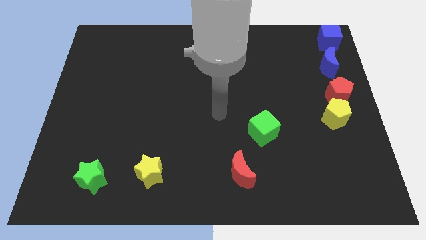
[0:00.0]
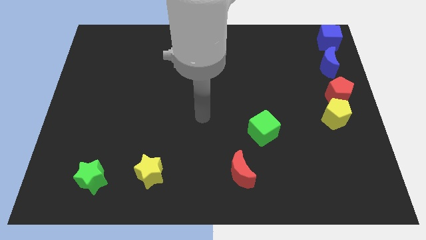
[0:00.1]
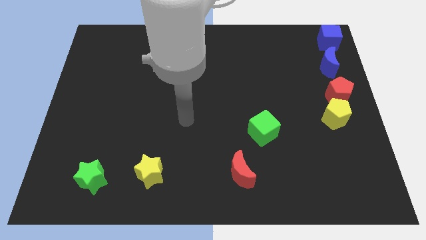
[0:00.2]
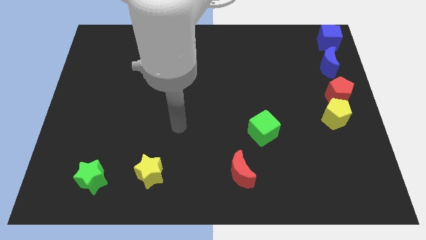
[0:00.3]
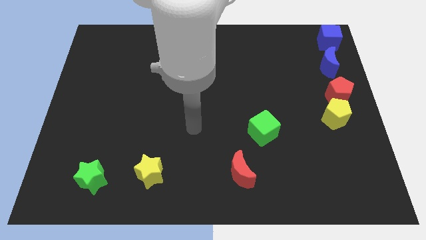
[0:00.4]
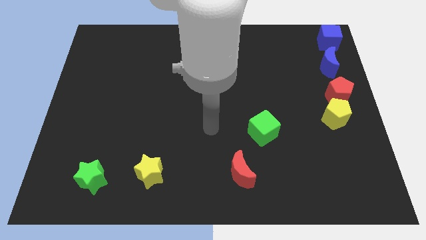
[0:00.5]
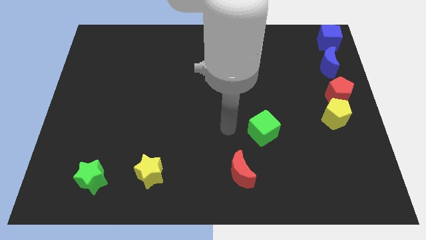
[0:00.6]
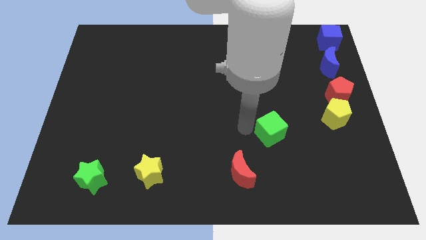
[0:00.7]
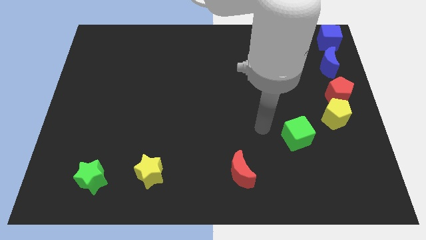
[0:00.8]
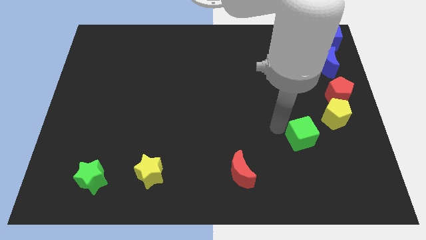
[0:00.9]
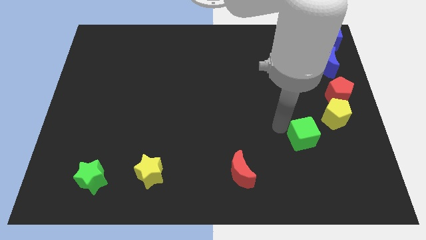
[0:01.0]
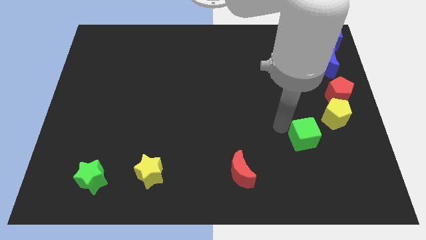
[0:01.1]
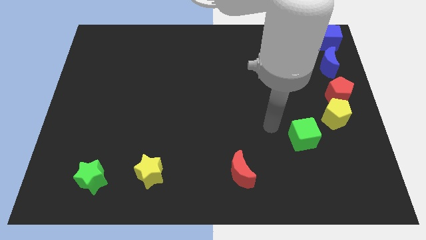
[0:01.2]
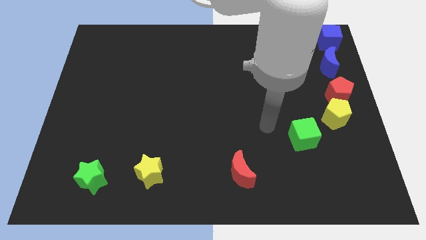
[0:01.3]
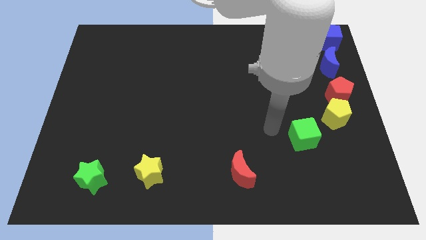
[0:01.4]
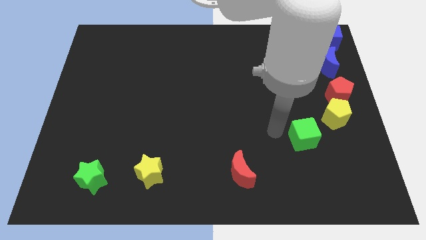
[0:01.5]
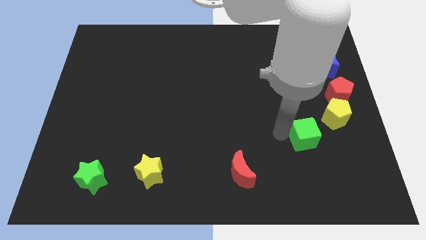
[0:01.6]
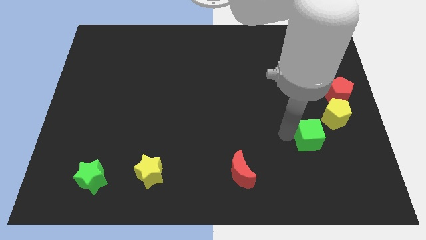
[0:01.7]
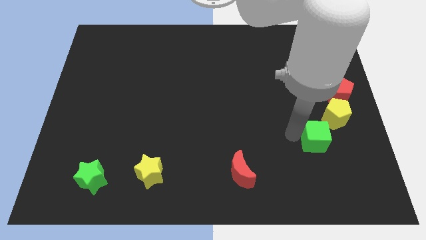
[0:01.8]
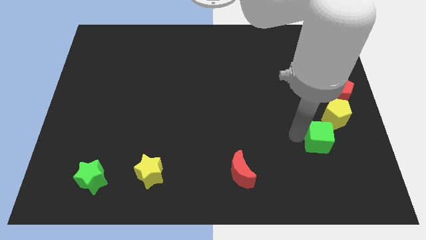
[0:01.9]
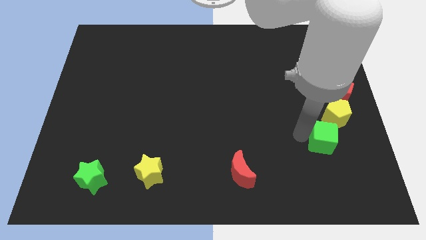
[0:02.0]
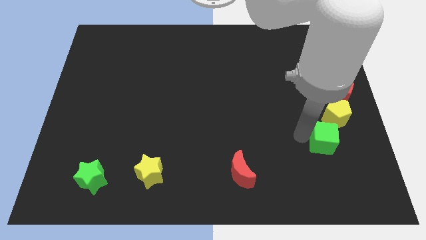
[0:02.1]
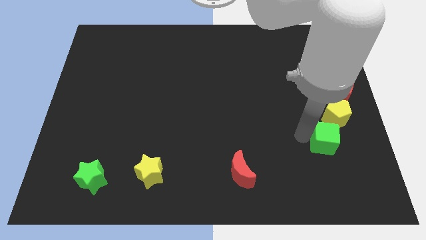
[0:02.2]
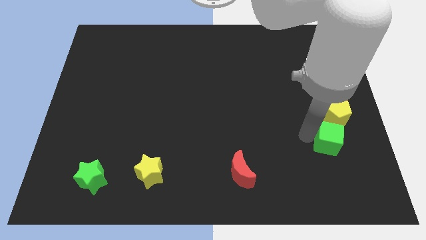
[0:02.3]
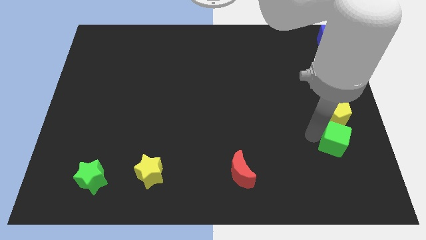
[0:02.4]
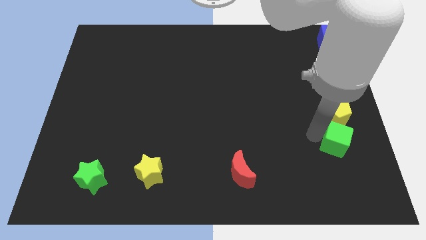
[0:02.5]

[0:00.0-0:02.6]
push the green cube below the yellow pentagon

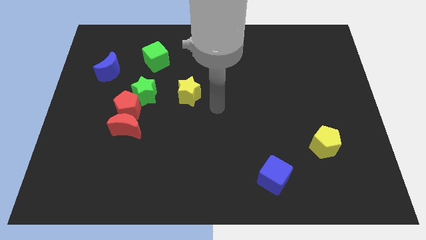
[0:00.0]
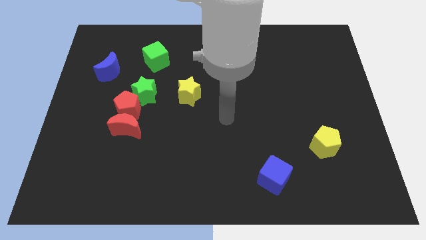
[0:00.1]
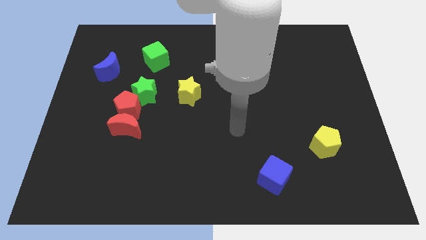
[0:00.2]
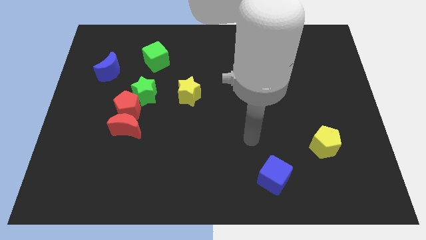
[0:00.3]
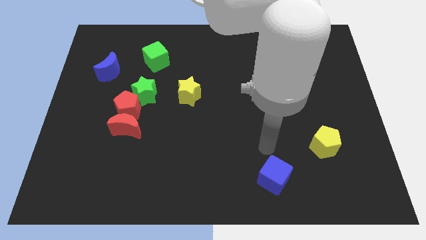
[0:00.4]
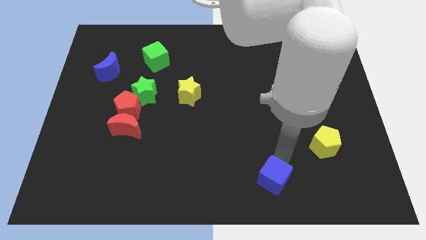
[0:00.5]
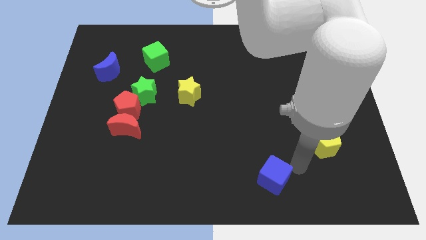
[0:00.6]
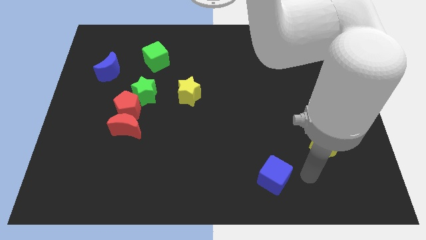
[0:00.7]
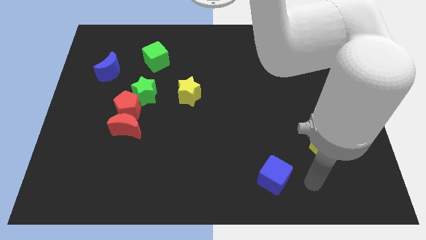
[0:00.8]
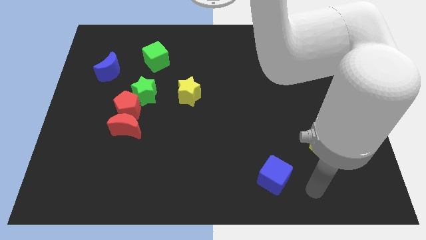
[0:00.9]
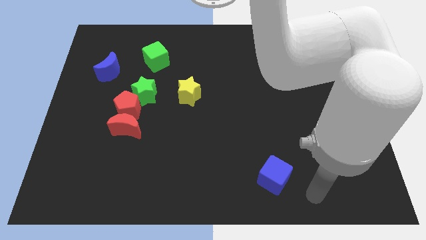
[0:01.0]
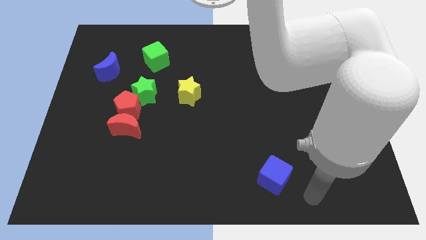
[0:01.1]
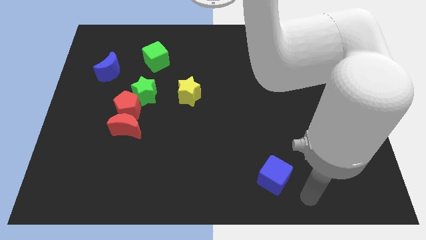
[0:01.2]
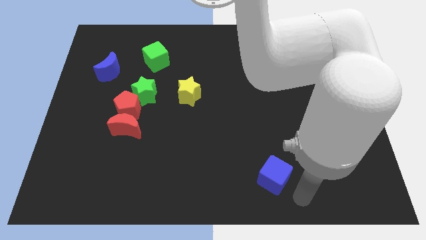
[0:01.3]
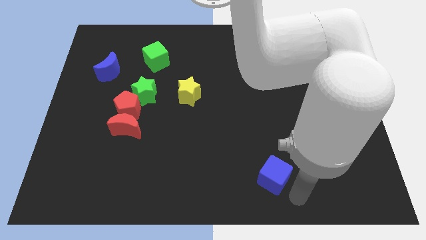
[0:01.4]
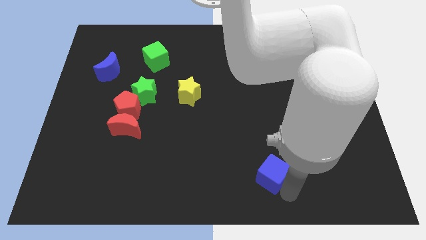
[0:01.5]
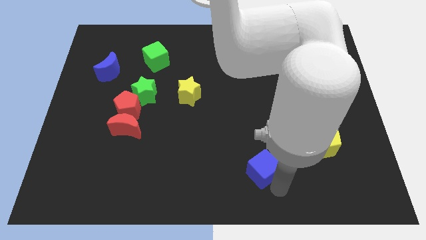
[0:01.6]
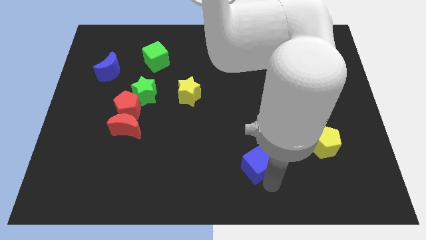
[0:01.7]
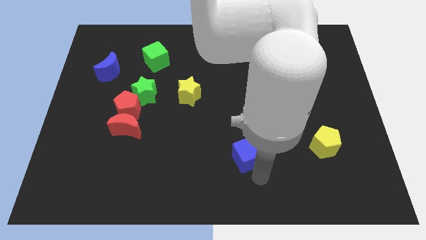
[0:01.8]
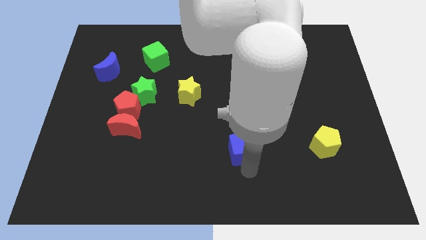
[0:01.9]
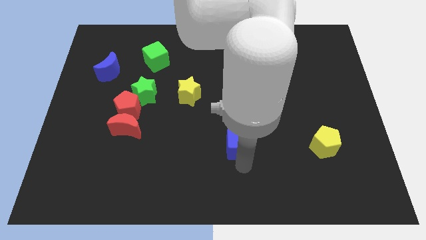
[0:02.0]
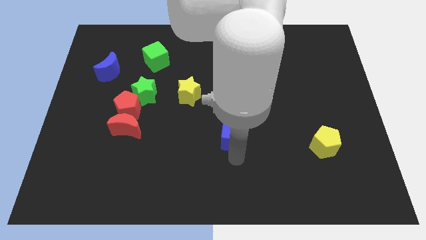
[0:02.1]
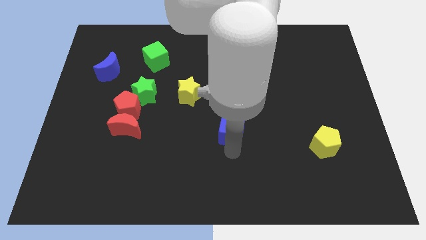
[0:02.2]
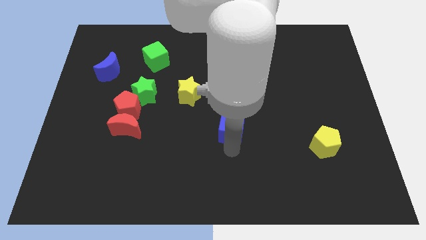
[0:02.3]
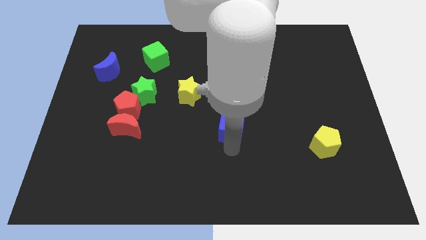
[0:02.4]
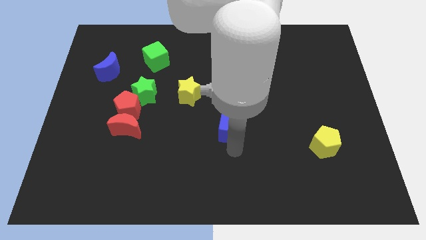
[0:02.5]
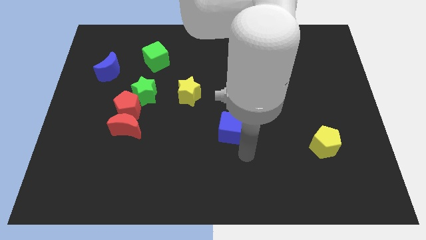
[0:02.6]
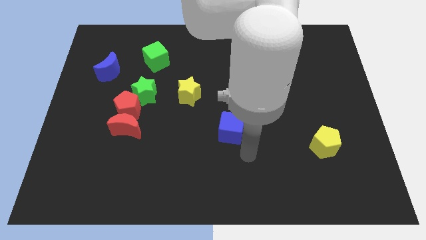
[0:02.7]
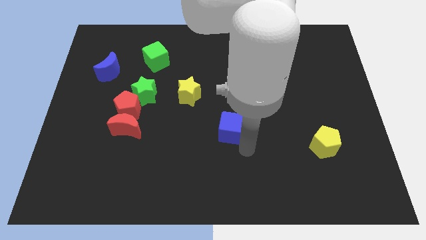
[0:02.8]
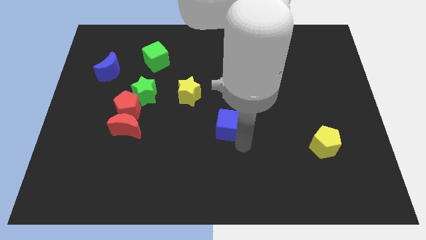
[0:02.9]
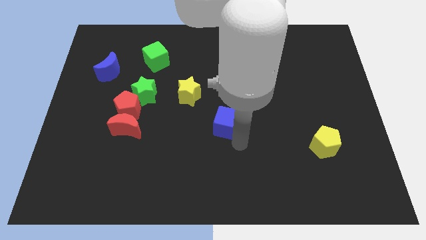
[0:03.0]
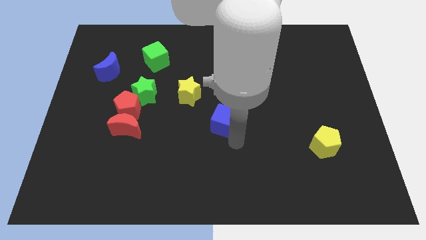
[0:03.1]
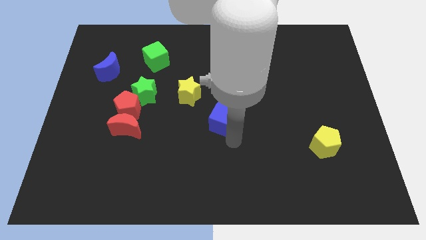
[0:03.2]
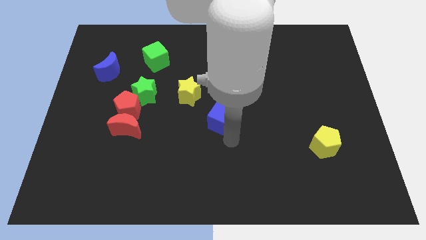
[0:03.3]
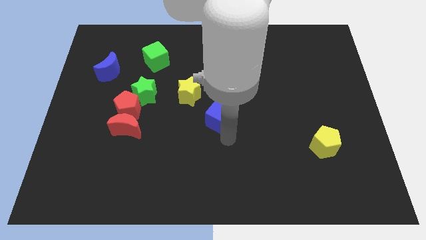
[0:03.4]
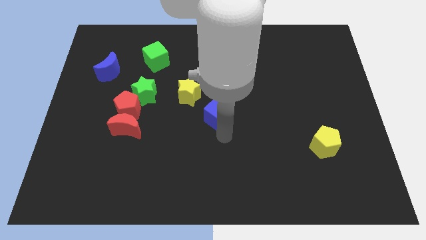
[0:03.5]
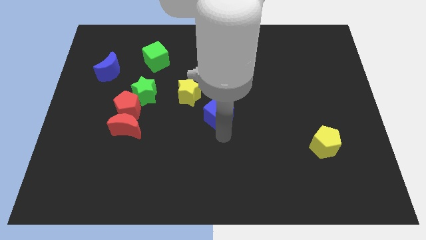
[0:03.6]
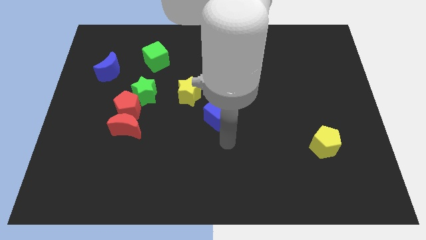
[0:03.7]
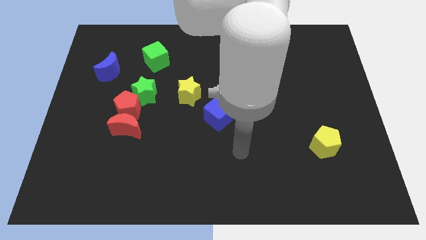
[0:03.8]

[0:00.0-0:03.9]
put the blue cube at the bottom right side of yellow star

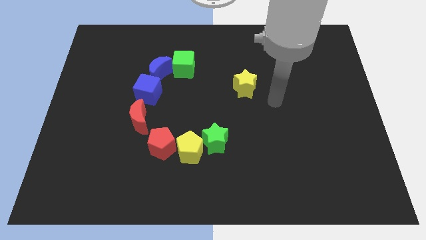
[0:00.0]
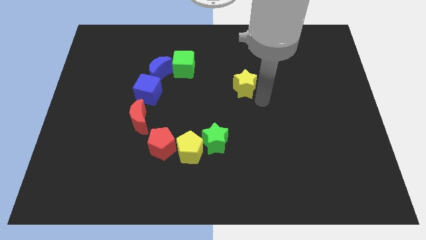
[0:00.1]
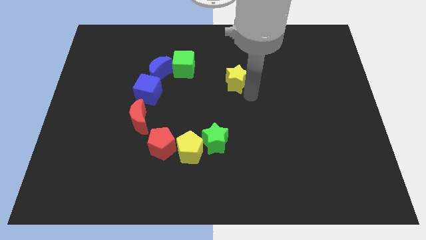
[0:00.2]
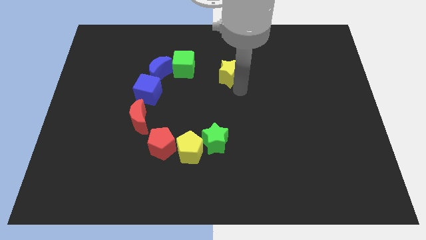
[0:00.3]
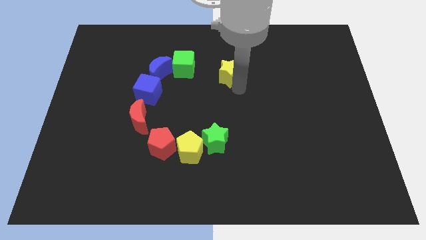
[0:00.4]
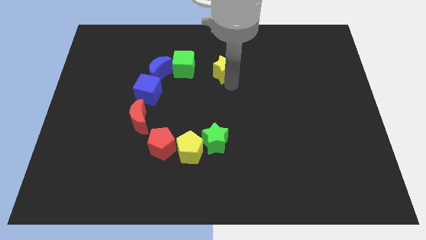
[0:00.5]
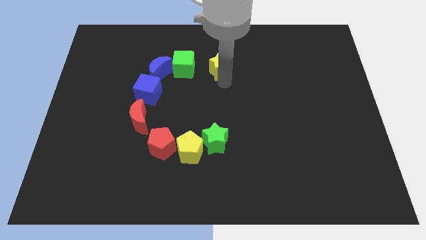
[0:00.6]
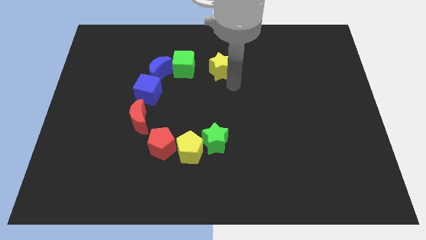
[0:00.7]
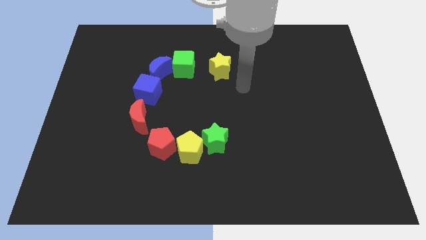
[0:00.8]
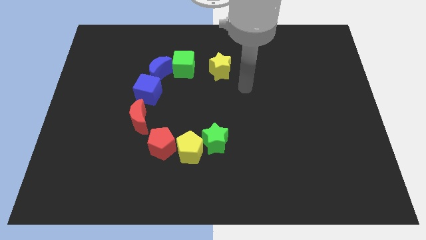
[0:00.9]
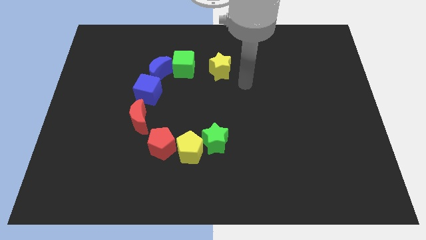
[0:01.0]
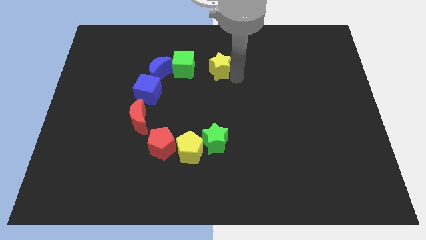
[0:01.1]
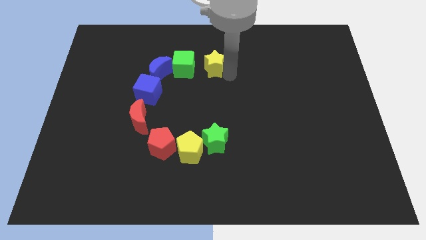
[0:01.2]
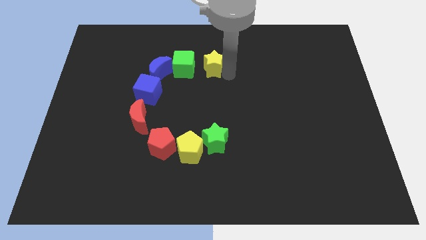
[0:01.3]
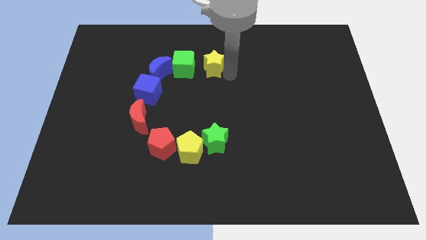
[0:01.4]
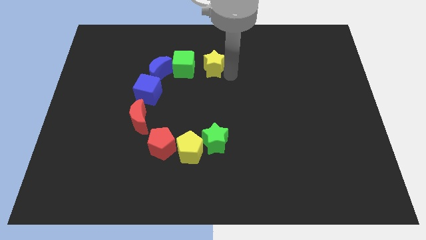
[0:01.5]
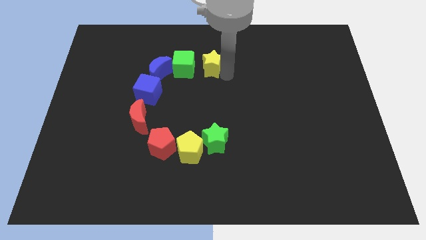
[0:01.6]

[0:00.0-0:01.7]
move the yellow star right beside the green cube

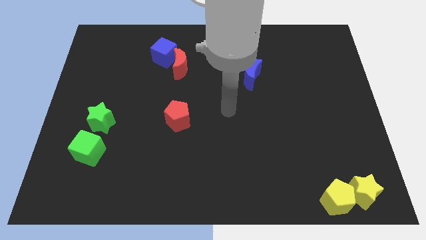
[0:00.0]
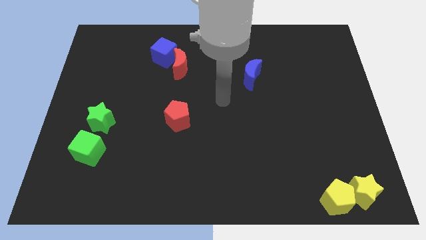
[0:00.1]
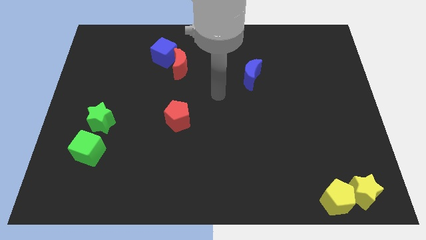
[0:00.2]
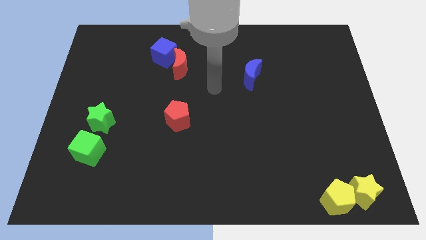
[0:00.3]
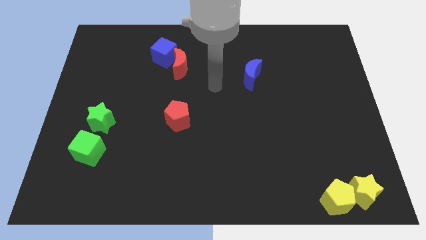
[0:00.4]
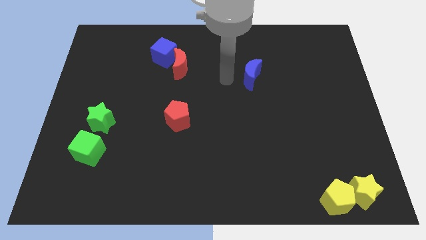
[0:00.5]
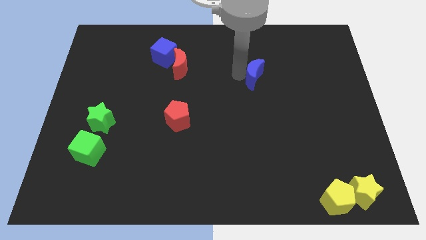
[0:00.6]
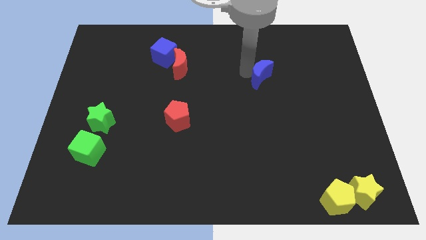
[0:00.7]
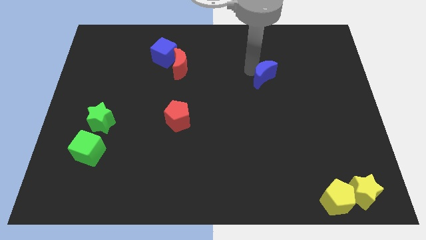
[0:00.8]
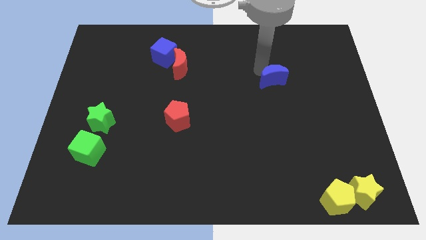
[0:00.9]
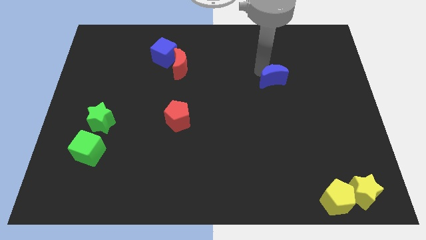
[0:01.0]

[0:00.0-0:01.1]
push the blue crescent slightly to the right
